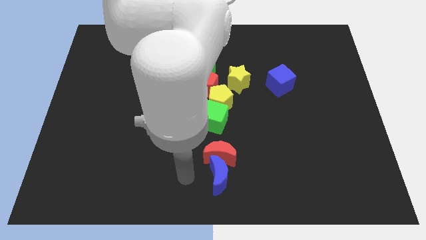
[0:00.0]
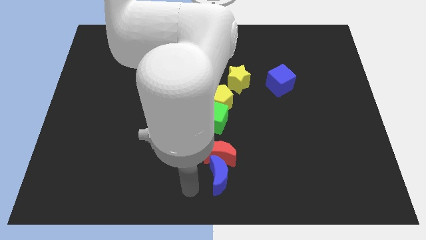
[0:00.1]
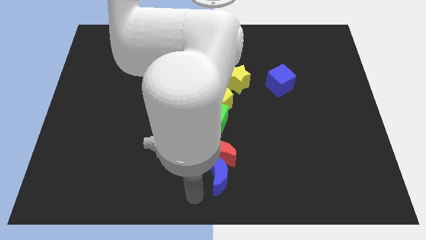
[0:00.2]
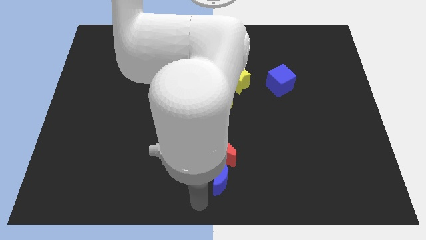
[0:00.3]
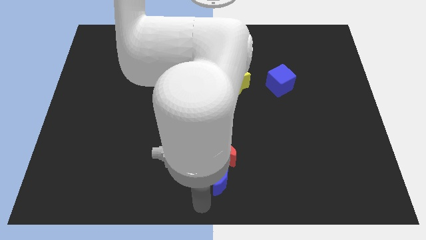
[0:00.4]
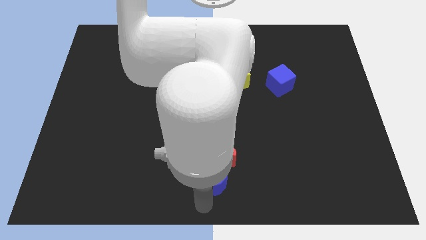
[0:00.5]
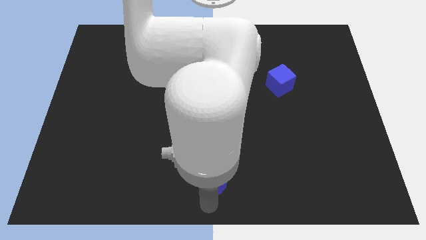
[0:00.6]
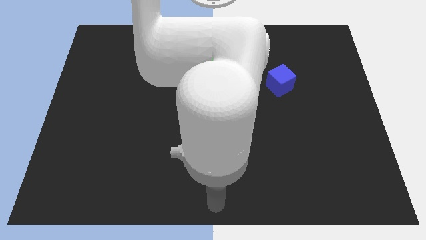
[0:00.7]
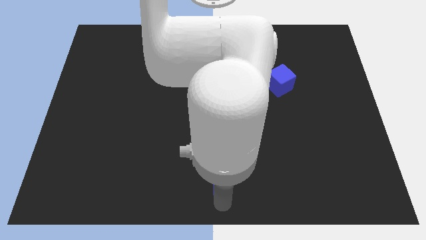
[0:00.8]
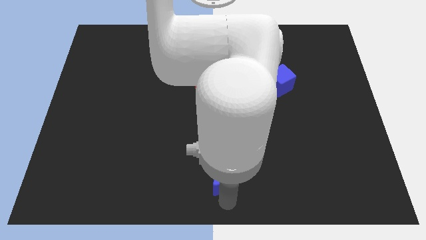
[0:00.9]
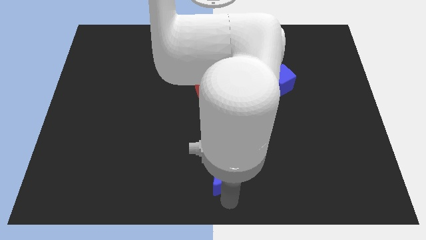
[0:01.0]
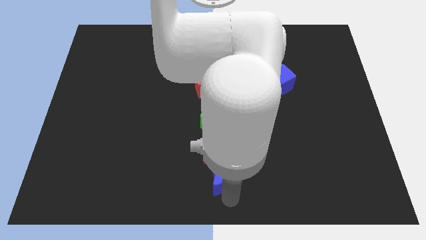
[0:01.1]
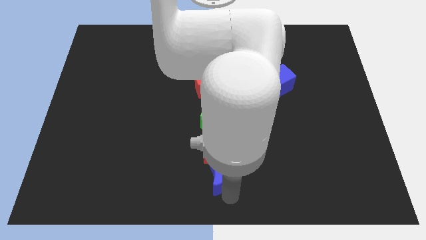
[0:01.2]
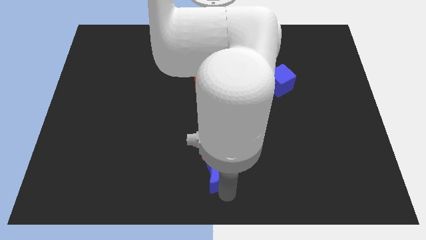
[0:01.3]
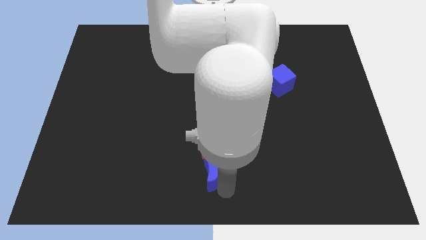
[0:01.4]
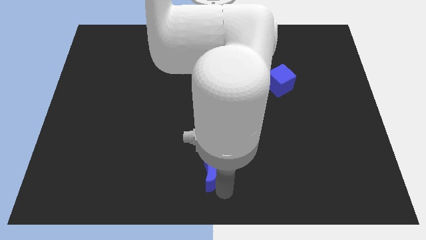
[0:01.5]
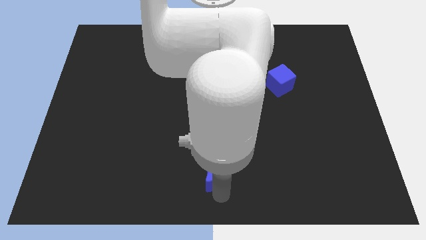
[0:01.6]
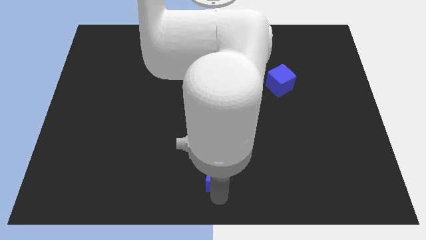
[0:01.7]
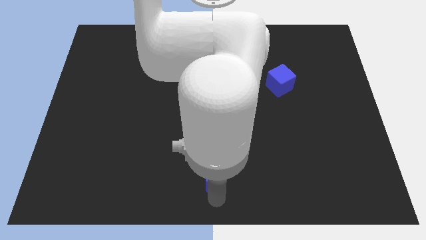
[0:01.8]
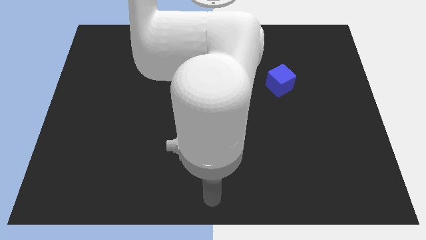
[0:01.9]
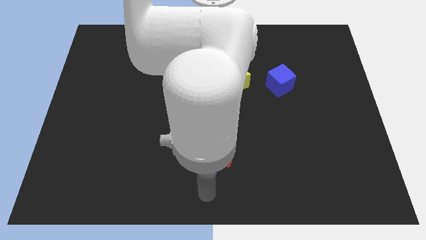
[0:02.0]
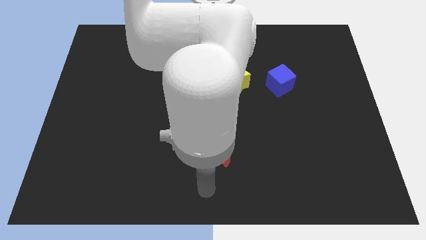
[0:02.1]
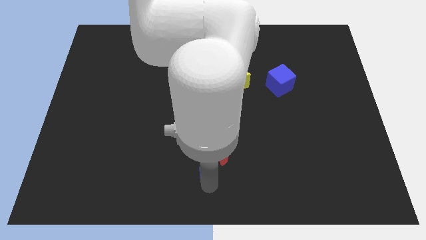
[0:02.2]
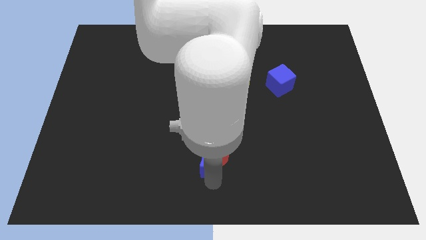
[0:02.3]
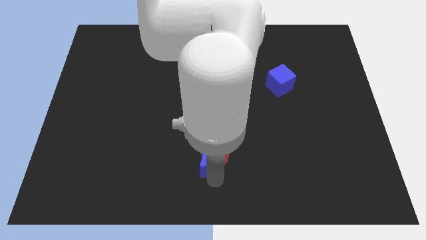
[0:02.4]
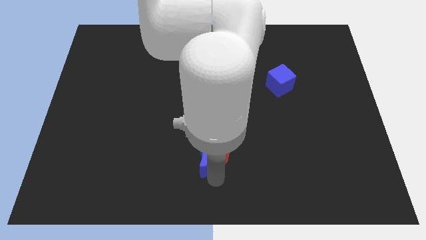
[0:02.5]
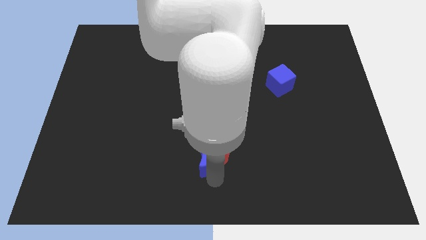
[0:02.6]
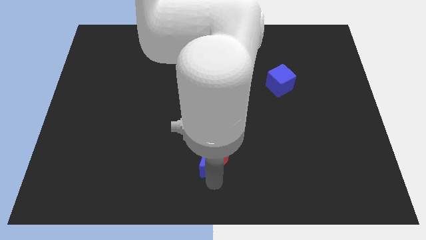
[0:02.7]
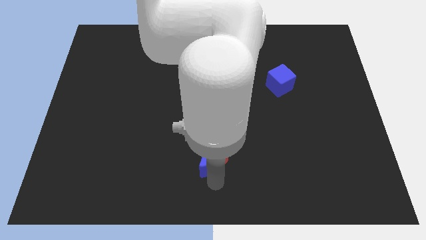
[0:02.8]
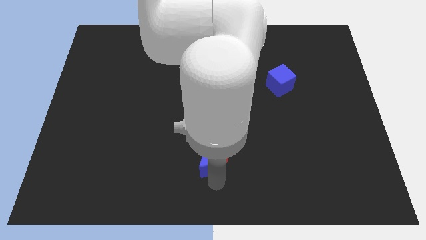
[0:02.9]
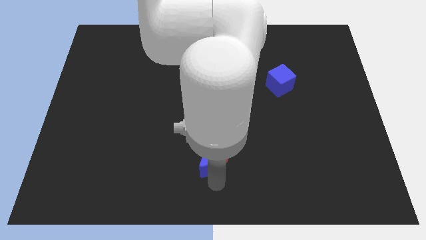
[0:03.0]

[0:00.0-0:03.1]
move your arm to the blue moon

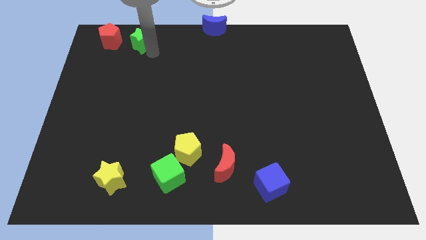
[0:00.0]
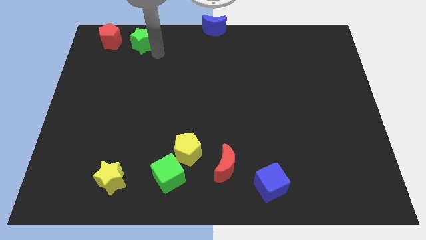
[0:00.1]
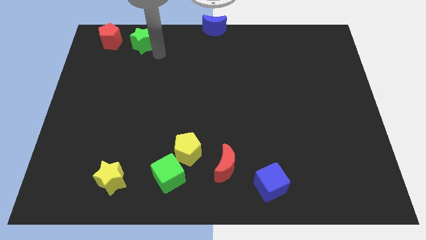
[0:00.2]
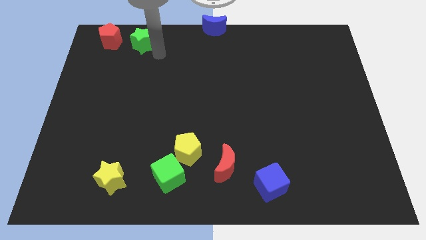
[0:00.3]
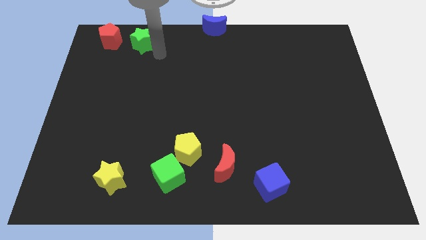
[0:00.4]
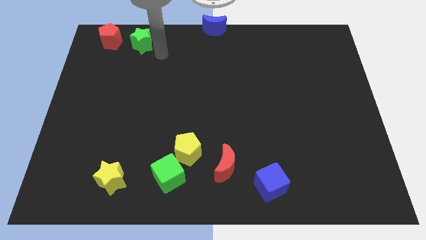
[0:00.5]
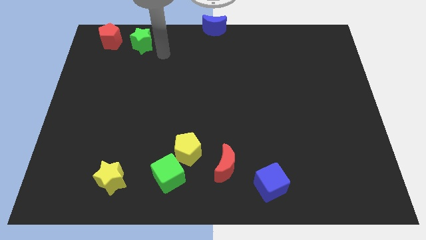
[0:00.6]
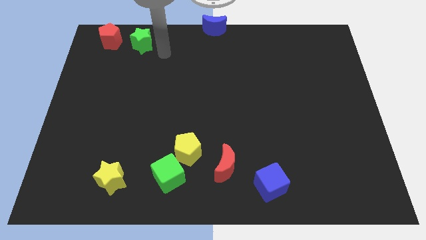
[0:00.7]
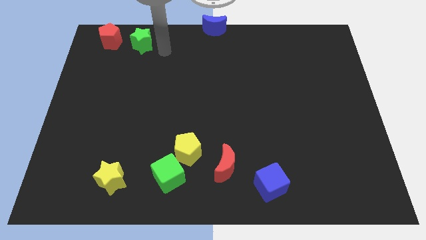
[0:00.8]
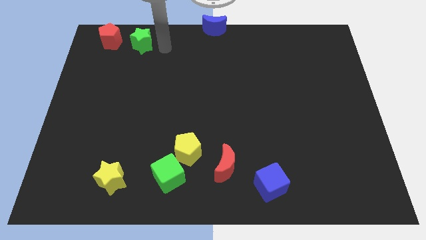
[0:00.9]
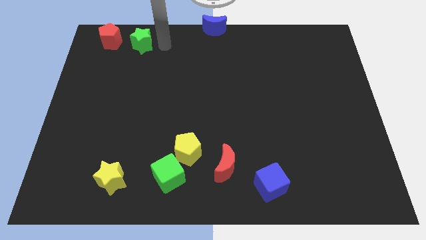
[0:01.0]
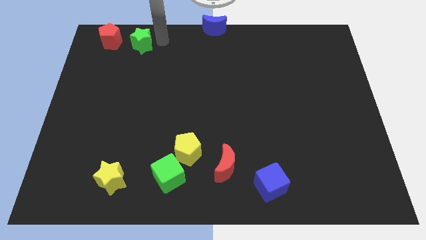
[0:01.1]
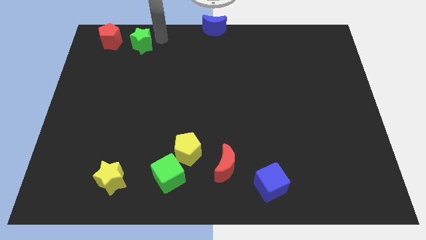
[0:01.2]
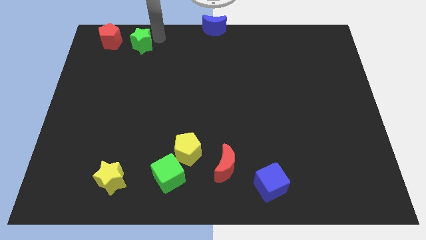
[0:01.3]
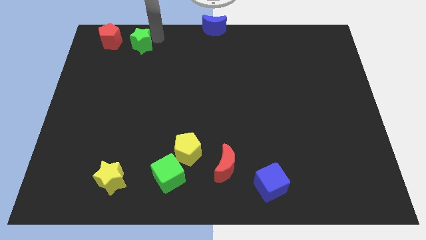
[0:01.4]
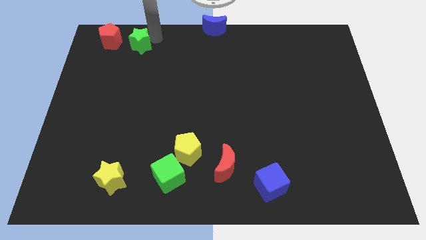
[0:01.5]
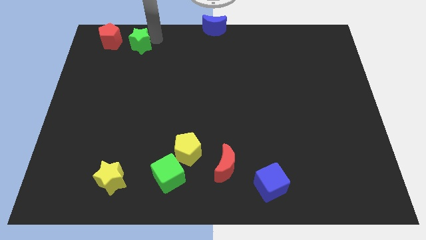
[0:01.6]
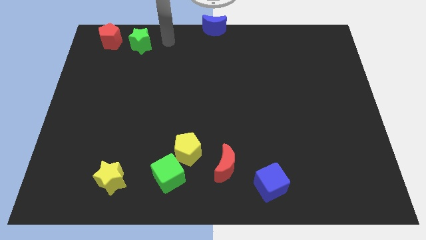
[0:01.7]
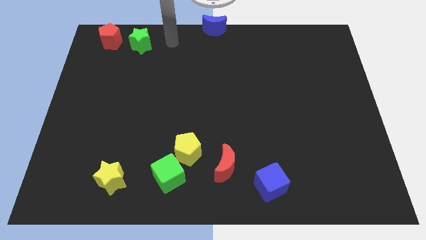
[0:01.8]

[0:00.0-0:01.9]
place the green star to the right of the red pentagon

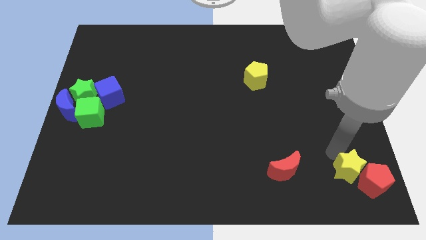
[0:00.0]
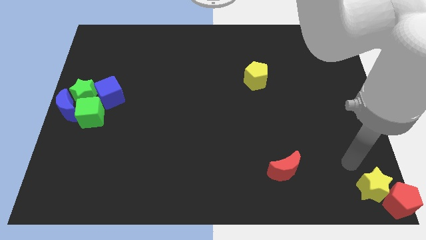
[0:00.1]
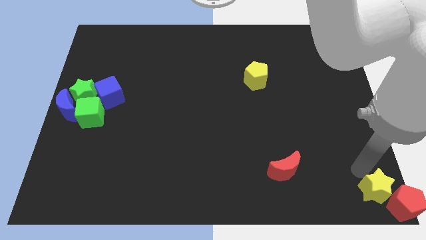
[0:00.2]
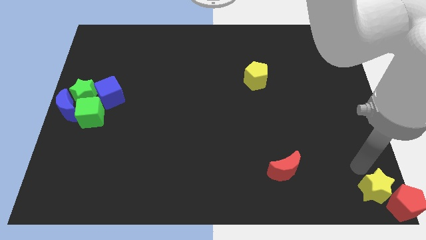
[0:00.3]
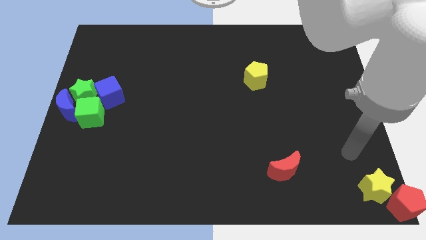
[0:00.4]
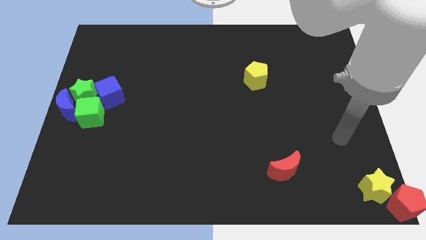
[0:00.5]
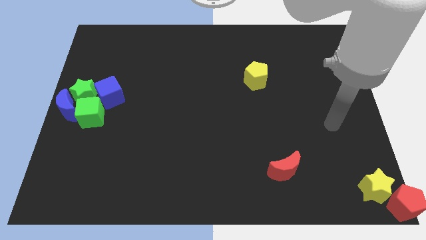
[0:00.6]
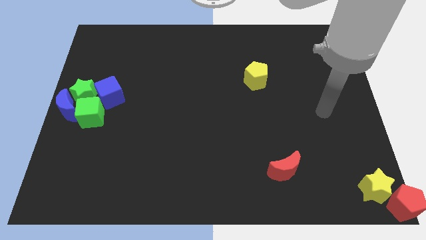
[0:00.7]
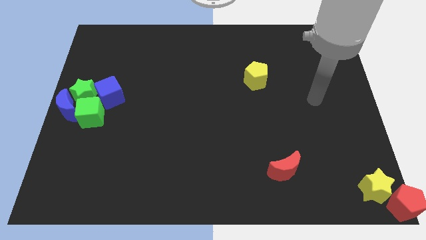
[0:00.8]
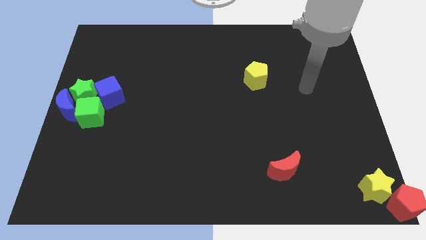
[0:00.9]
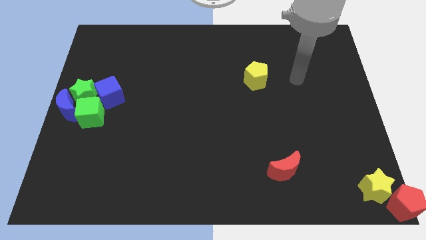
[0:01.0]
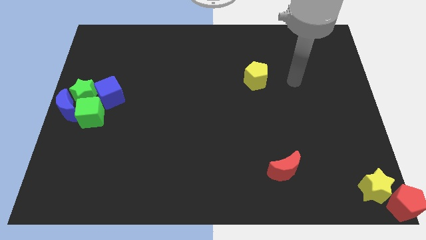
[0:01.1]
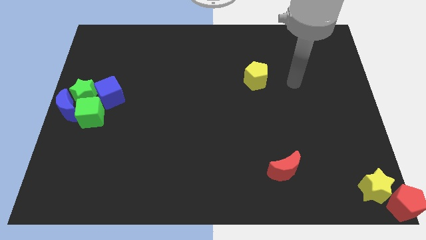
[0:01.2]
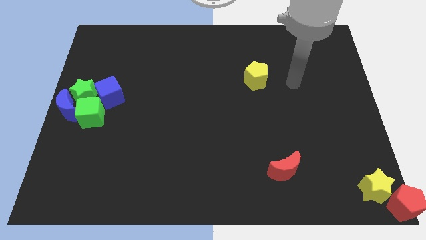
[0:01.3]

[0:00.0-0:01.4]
push the red pentagon and yellow star at the bottom right corner

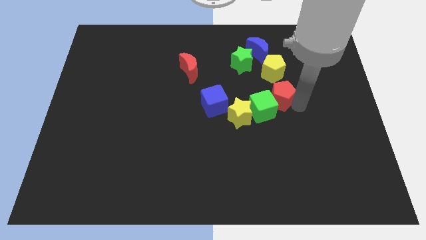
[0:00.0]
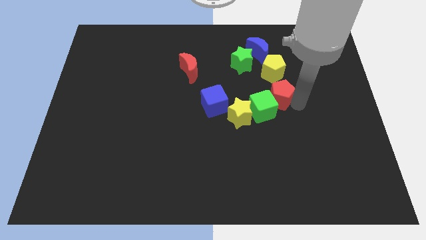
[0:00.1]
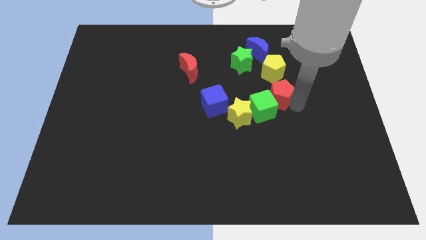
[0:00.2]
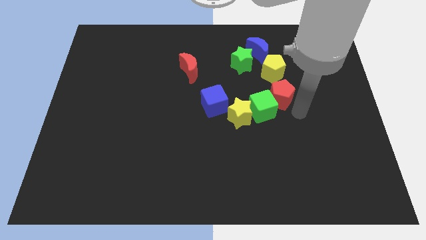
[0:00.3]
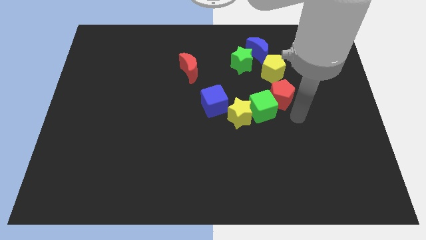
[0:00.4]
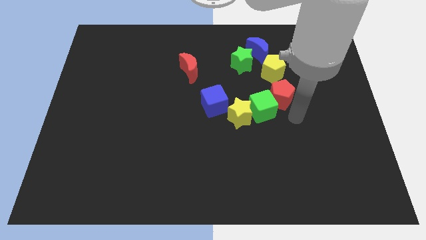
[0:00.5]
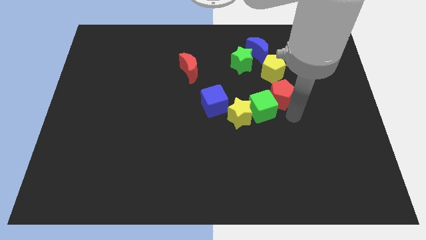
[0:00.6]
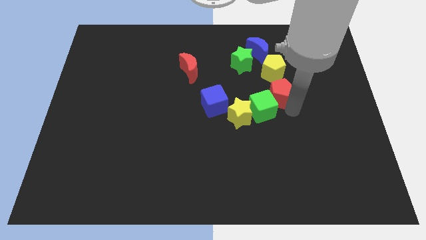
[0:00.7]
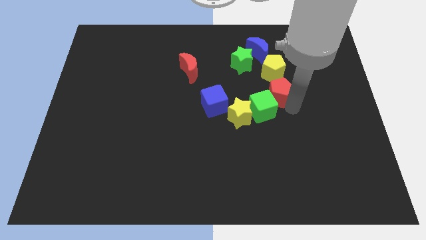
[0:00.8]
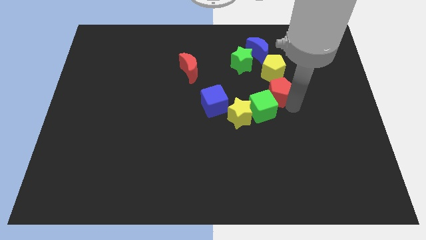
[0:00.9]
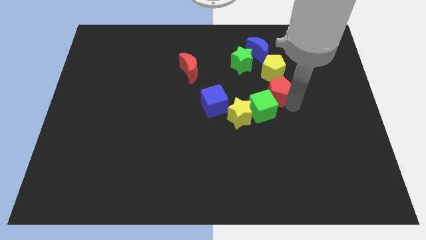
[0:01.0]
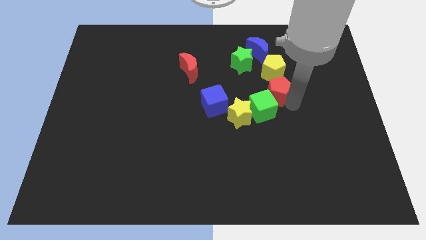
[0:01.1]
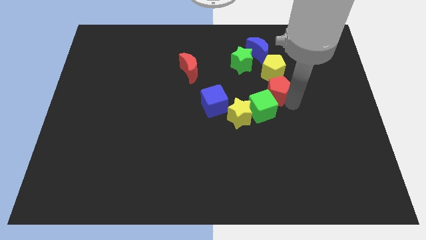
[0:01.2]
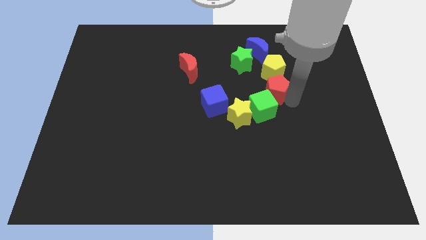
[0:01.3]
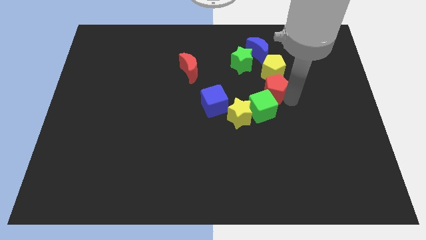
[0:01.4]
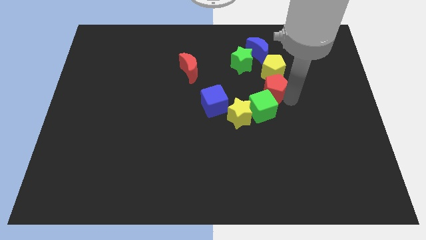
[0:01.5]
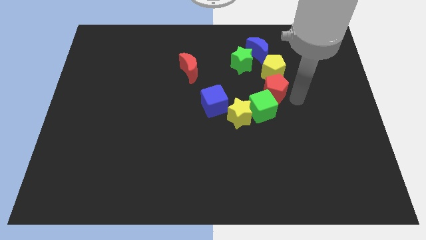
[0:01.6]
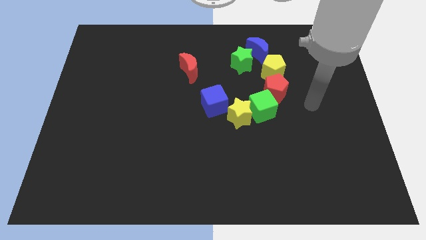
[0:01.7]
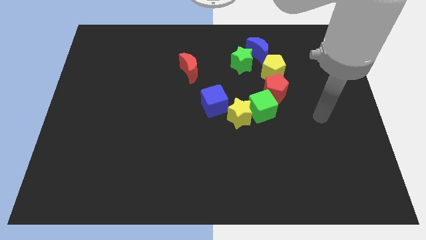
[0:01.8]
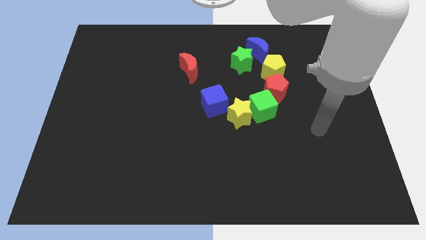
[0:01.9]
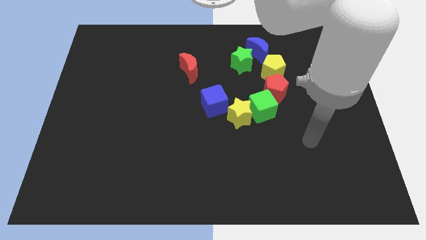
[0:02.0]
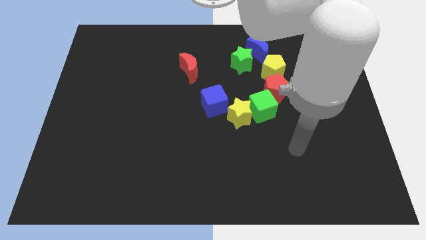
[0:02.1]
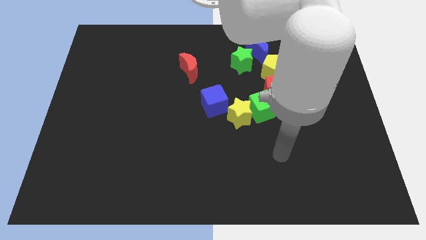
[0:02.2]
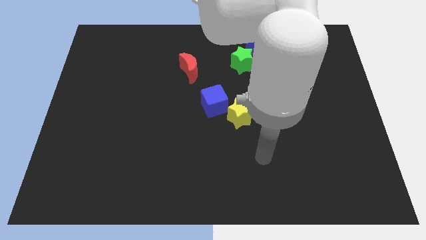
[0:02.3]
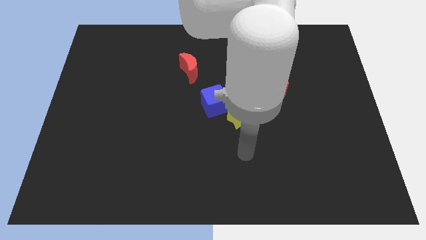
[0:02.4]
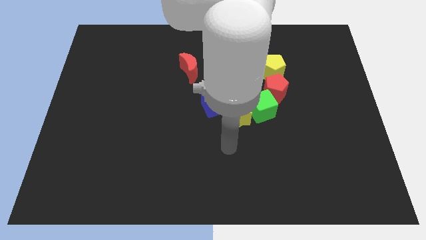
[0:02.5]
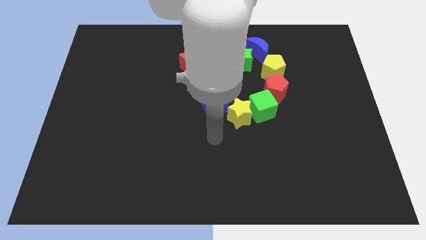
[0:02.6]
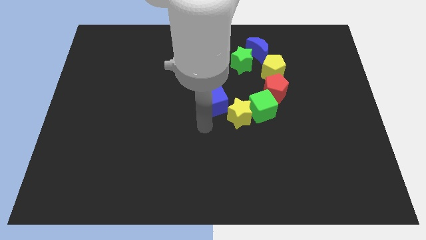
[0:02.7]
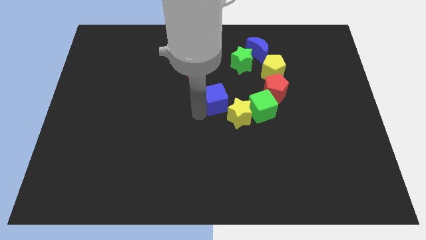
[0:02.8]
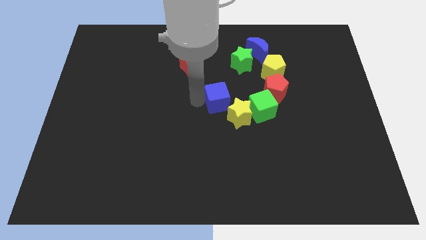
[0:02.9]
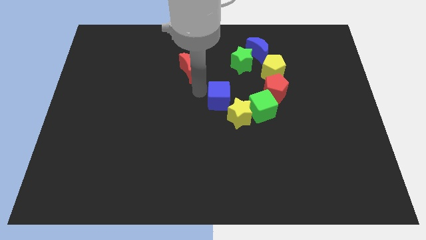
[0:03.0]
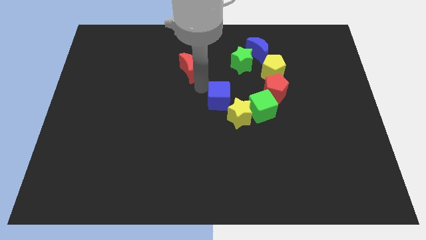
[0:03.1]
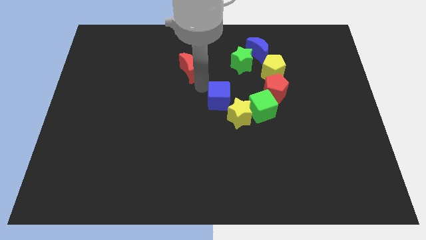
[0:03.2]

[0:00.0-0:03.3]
place the arm between the blue cube and red moon
